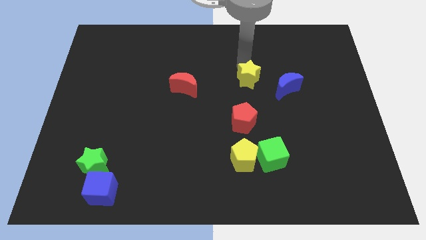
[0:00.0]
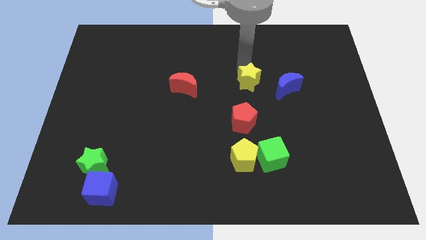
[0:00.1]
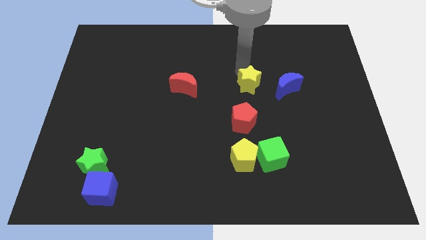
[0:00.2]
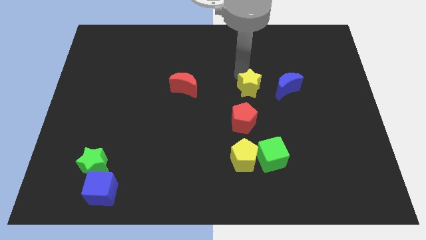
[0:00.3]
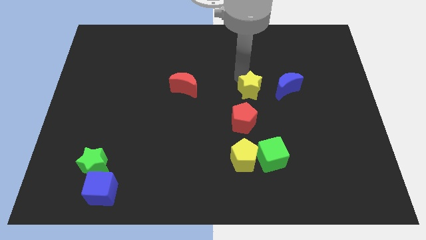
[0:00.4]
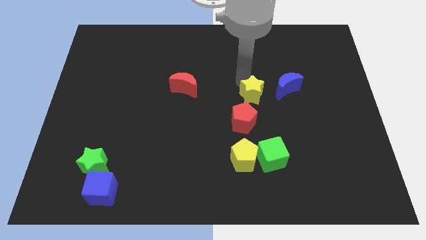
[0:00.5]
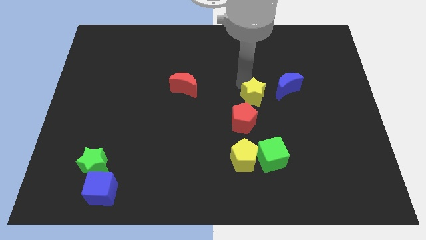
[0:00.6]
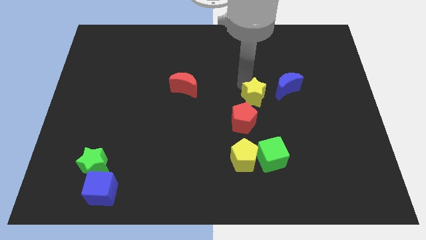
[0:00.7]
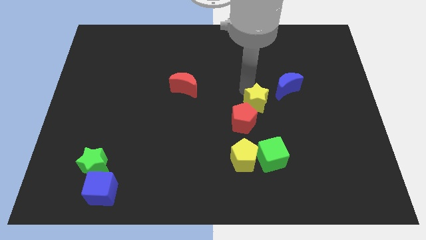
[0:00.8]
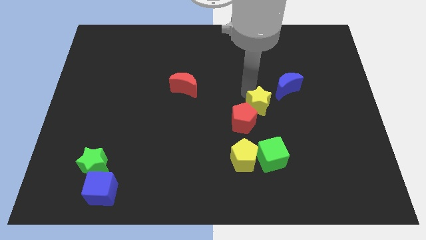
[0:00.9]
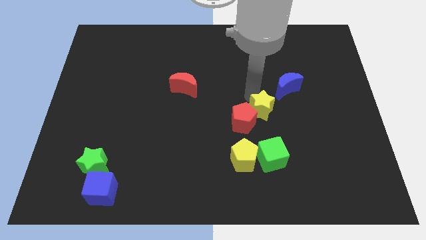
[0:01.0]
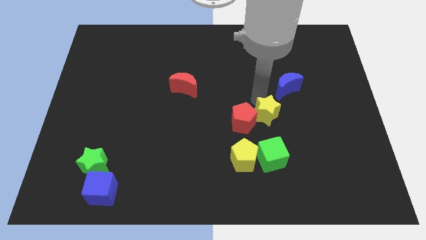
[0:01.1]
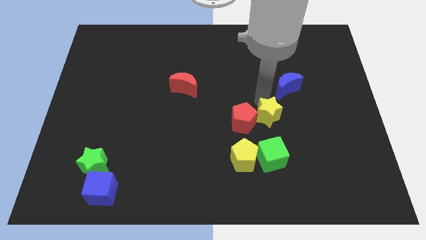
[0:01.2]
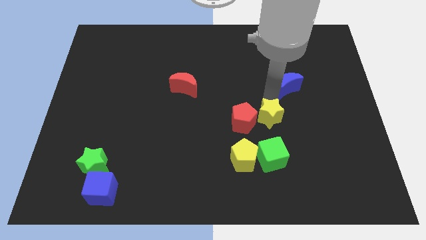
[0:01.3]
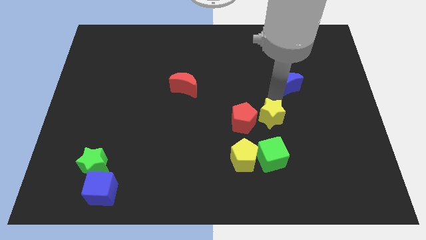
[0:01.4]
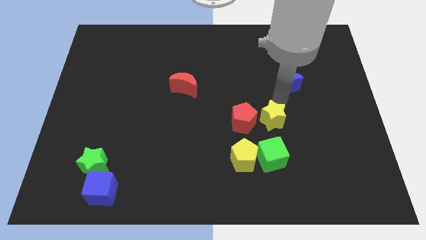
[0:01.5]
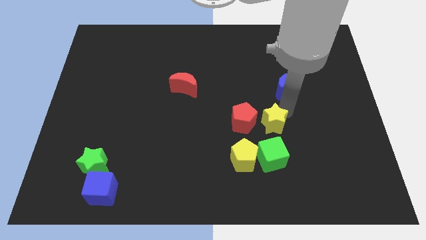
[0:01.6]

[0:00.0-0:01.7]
place the yellow star on top of the green cube

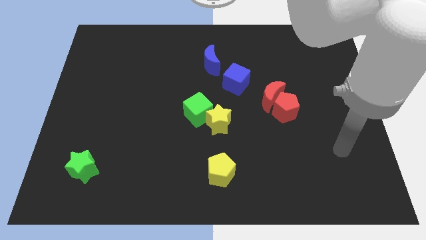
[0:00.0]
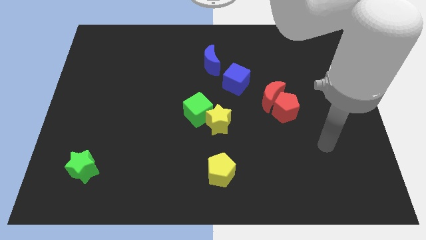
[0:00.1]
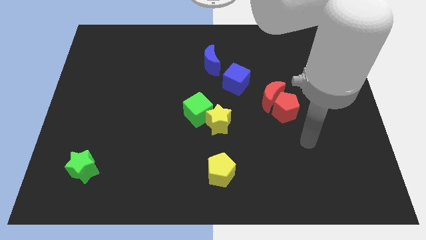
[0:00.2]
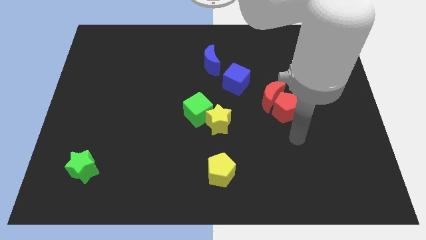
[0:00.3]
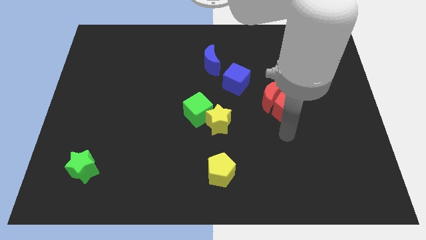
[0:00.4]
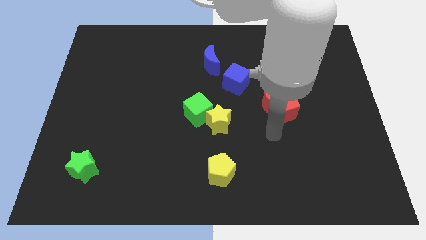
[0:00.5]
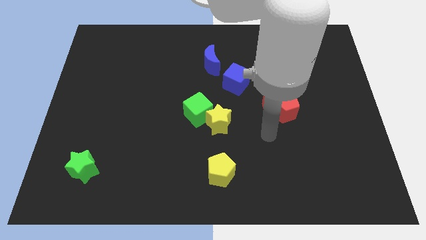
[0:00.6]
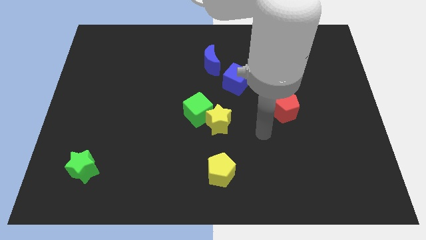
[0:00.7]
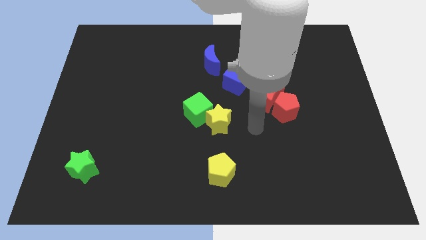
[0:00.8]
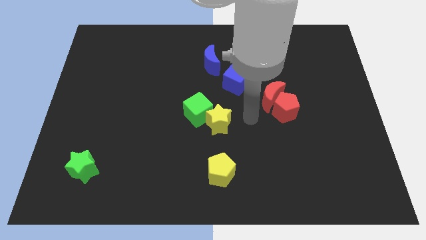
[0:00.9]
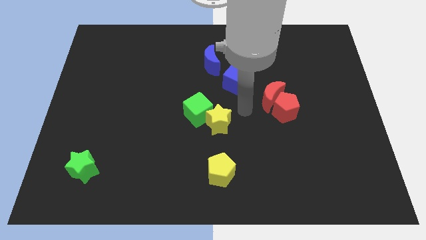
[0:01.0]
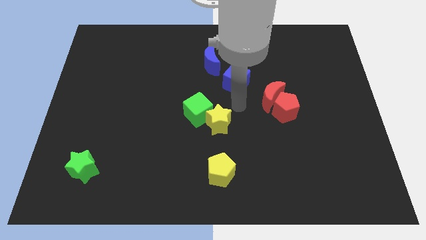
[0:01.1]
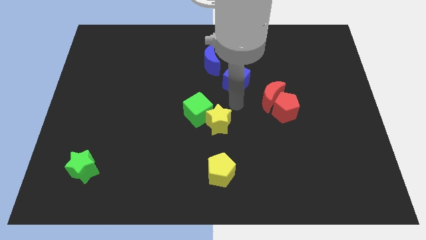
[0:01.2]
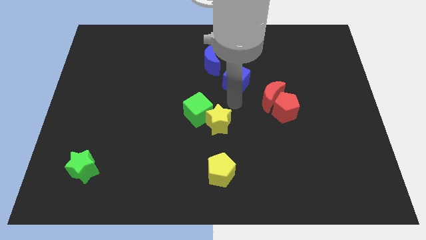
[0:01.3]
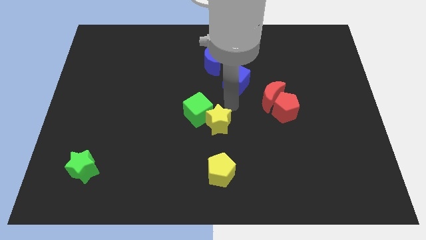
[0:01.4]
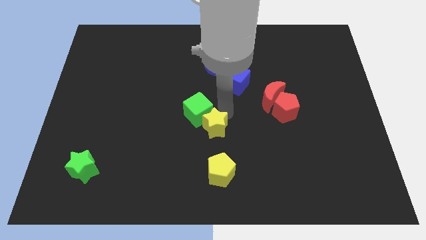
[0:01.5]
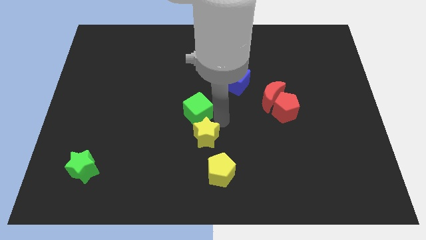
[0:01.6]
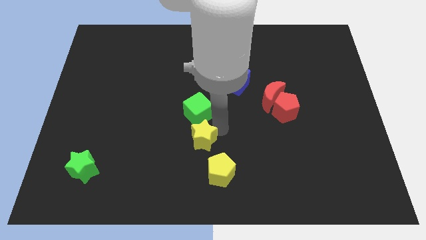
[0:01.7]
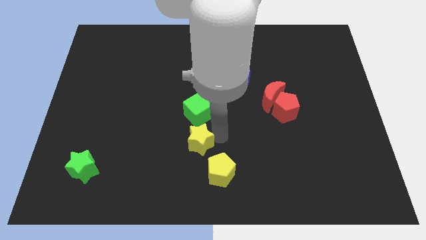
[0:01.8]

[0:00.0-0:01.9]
separate the yellow star from the green cube

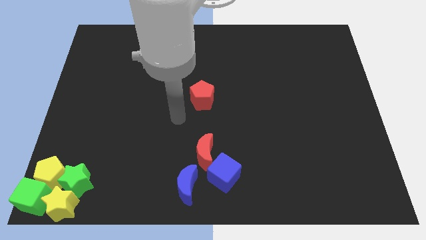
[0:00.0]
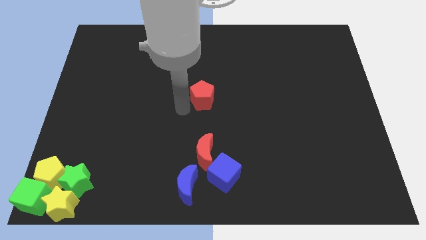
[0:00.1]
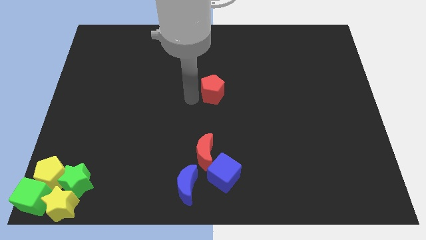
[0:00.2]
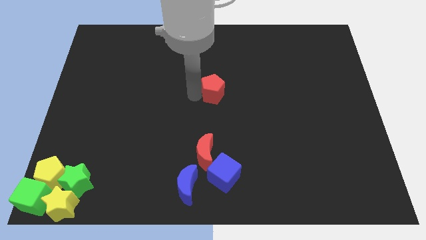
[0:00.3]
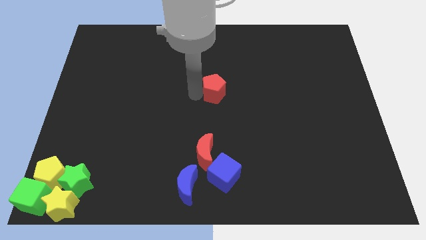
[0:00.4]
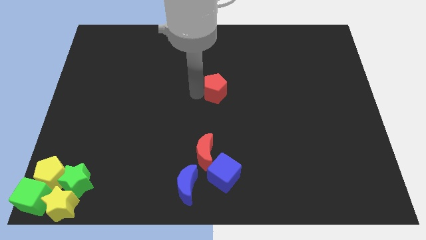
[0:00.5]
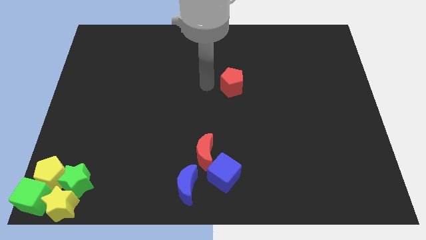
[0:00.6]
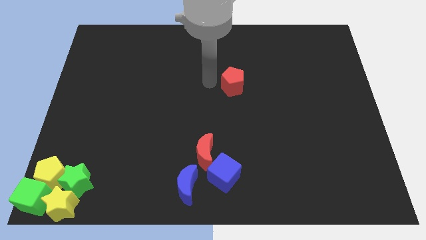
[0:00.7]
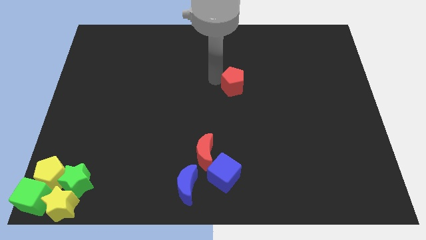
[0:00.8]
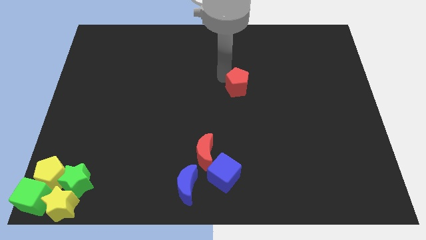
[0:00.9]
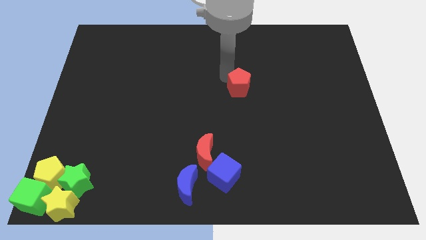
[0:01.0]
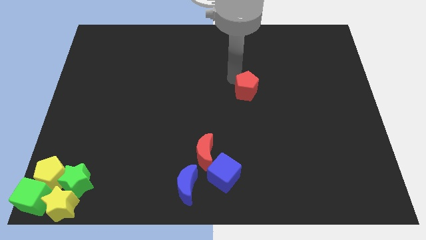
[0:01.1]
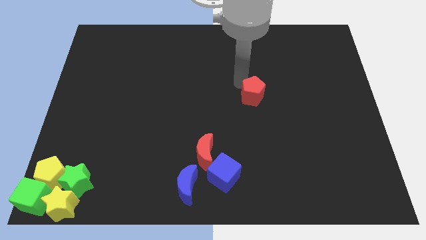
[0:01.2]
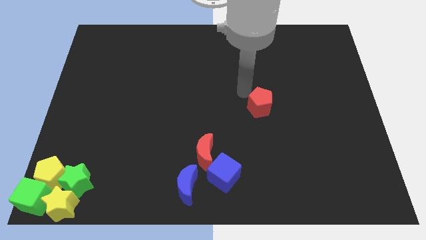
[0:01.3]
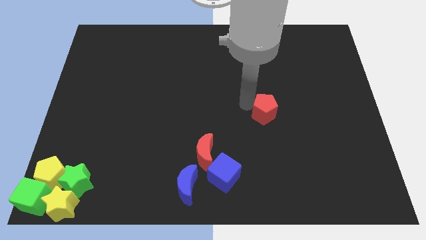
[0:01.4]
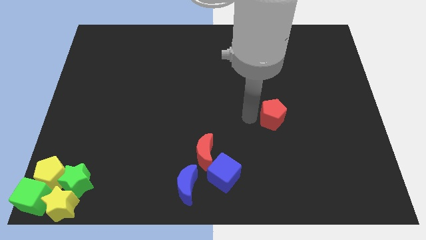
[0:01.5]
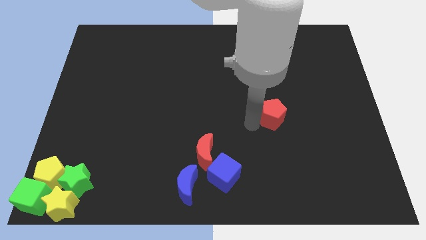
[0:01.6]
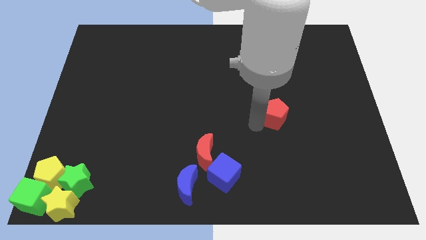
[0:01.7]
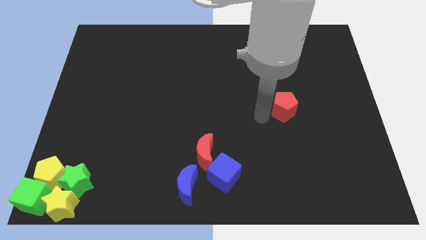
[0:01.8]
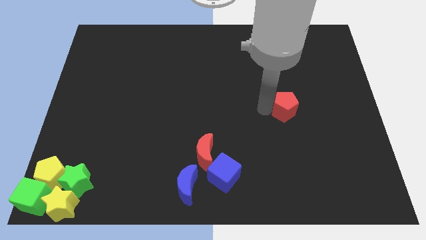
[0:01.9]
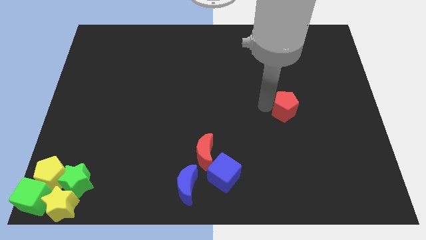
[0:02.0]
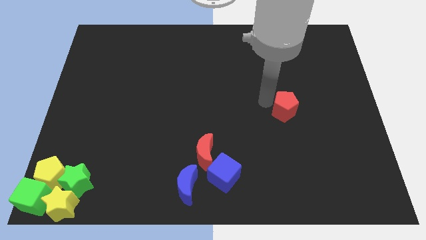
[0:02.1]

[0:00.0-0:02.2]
push the red pentagon to the right side of the table

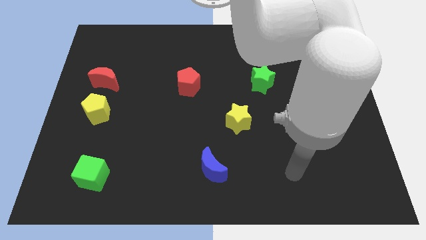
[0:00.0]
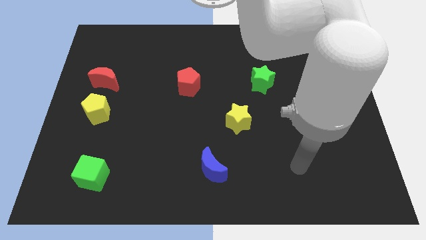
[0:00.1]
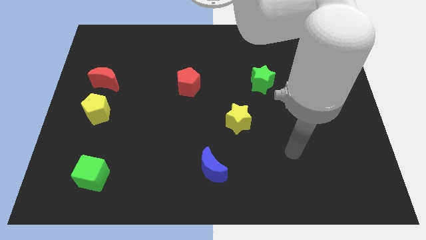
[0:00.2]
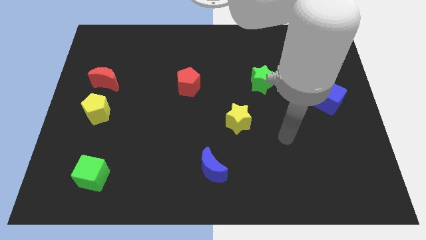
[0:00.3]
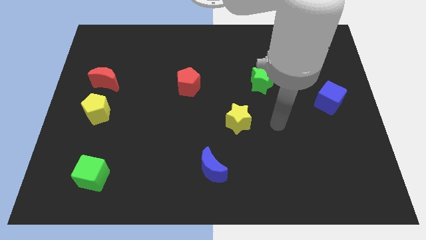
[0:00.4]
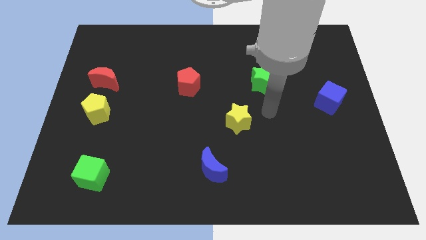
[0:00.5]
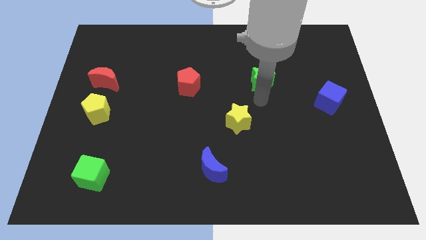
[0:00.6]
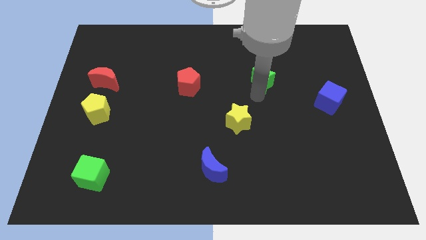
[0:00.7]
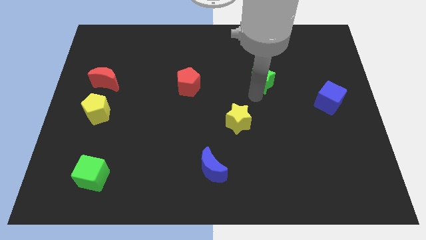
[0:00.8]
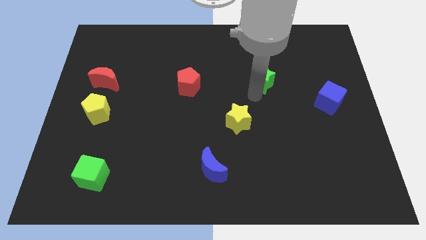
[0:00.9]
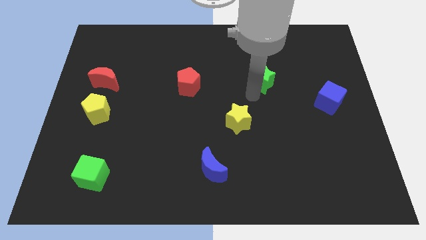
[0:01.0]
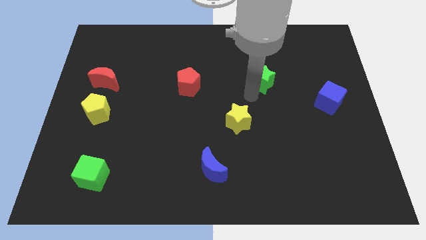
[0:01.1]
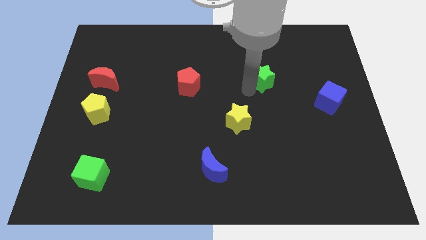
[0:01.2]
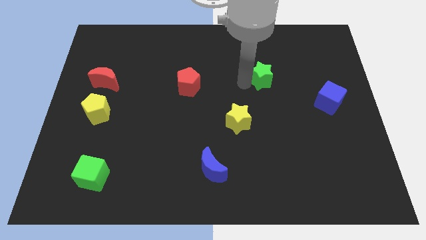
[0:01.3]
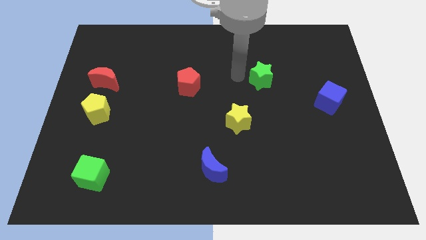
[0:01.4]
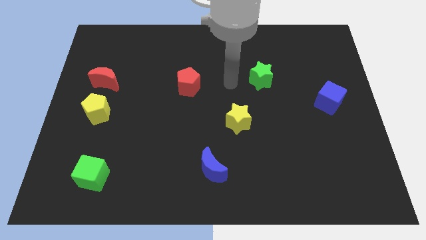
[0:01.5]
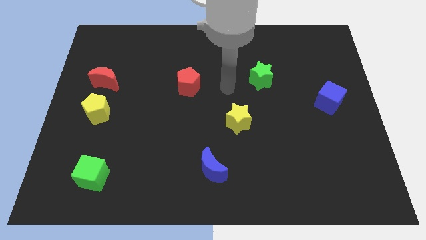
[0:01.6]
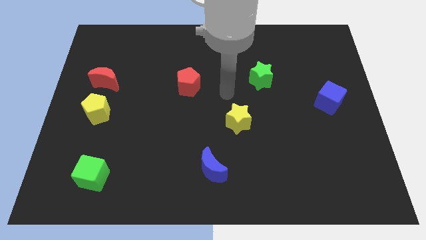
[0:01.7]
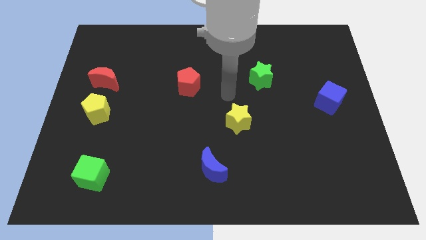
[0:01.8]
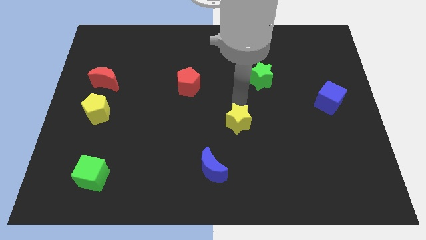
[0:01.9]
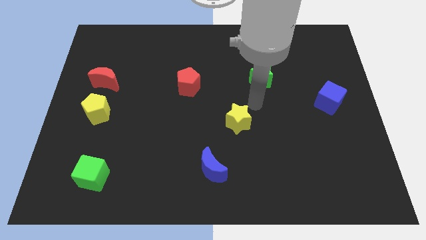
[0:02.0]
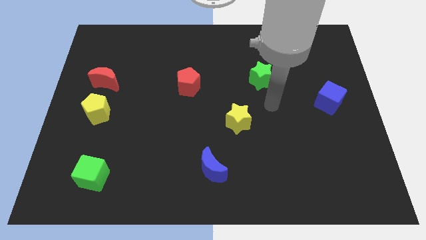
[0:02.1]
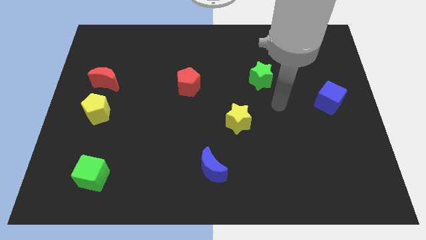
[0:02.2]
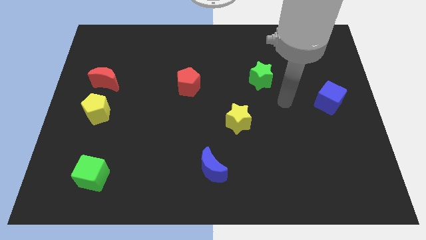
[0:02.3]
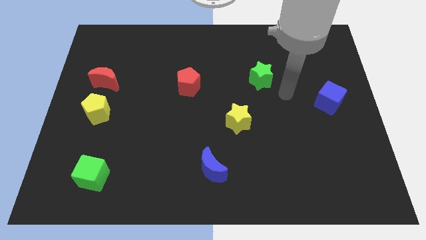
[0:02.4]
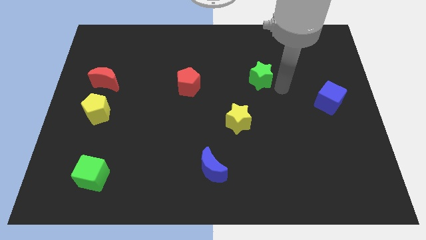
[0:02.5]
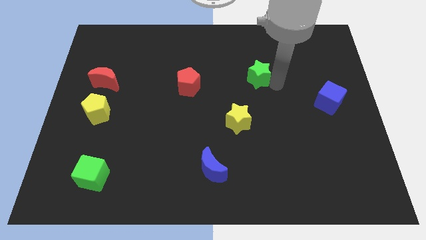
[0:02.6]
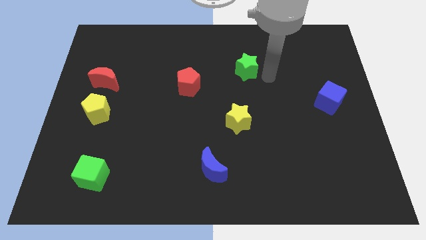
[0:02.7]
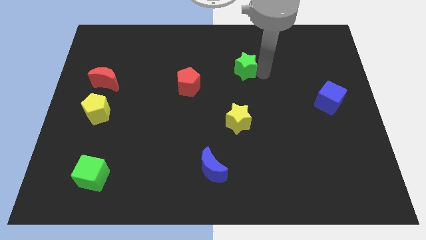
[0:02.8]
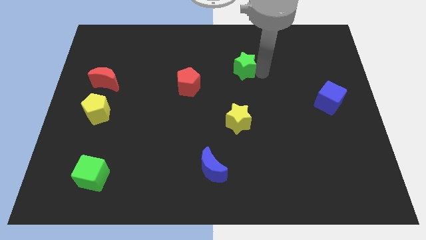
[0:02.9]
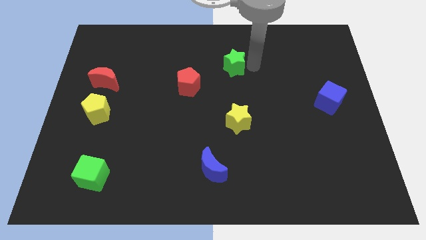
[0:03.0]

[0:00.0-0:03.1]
place the arm to the right of the green star
